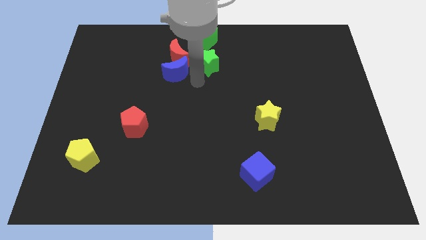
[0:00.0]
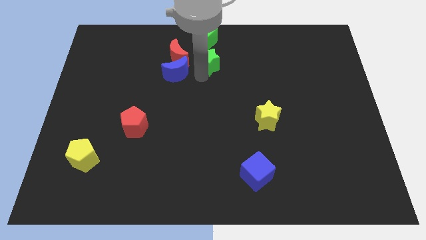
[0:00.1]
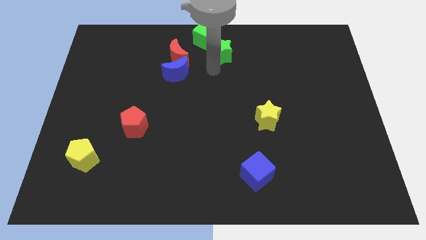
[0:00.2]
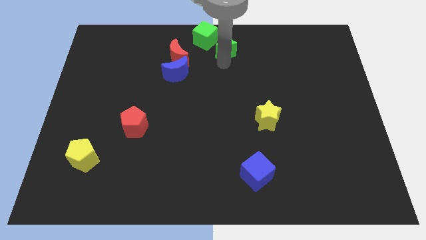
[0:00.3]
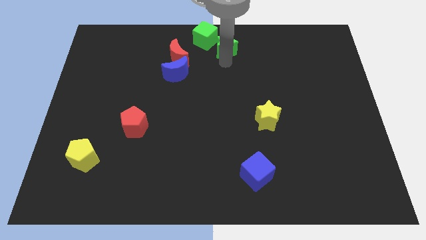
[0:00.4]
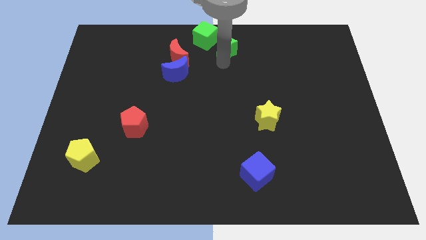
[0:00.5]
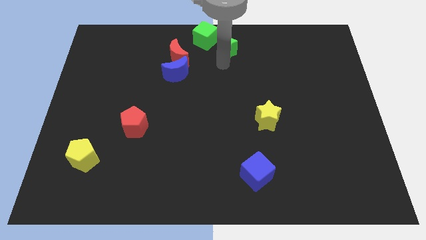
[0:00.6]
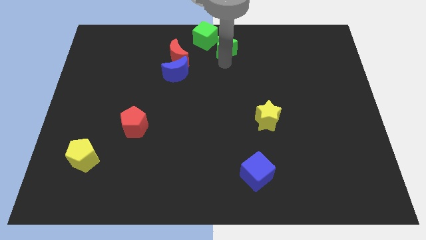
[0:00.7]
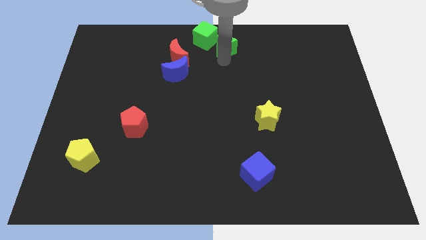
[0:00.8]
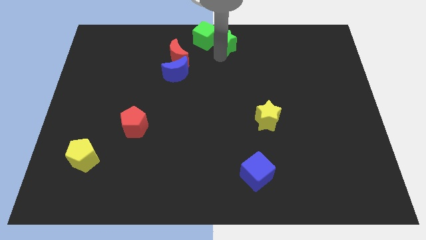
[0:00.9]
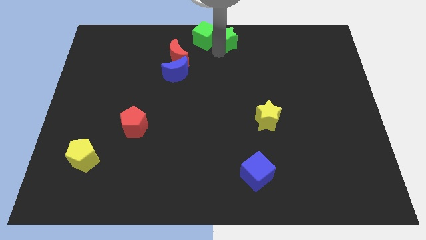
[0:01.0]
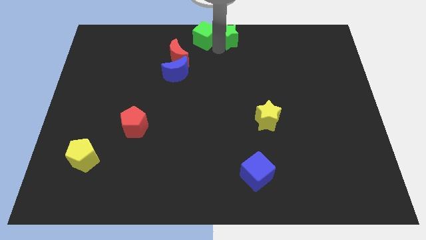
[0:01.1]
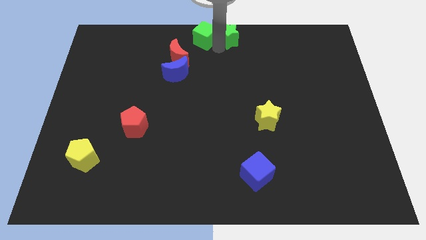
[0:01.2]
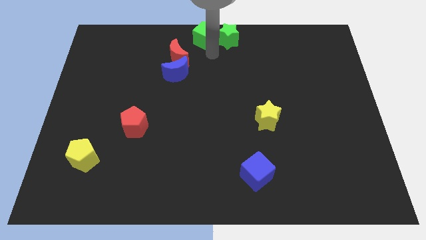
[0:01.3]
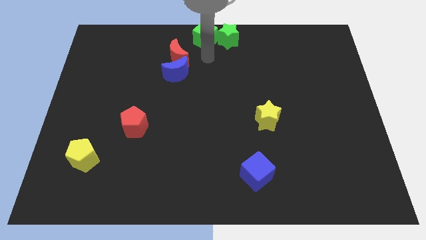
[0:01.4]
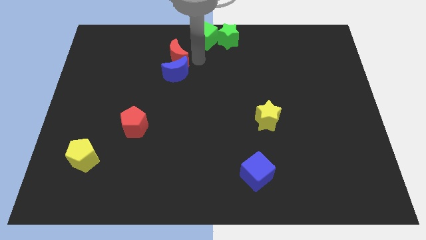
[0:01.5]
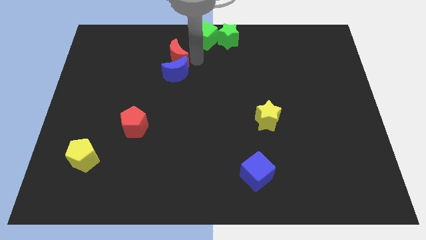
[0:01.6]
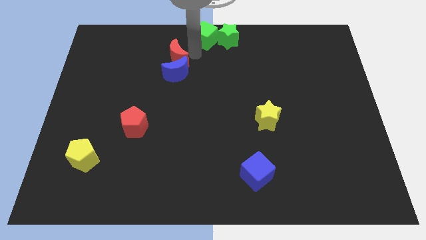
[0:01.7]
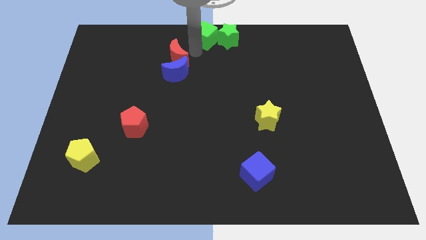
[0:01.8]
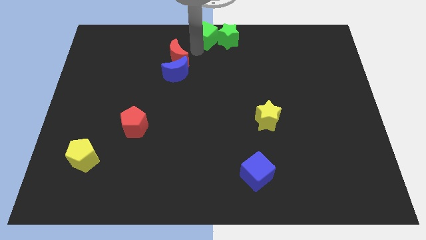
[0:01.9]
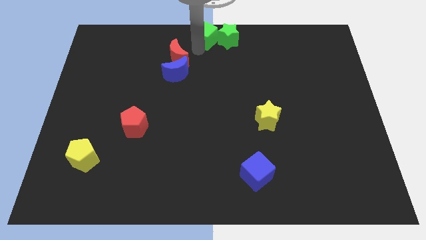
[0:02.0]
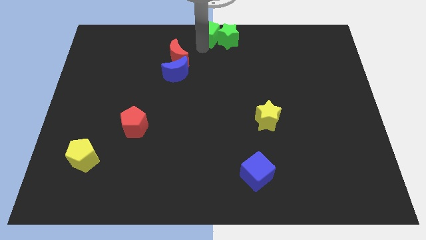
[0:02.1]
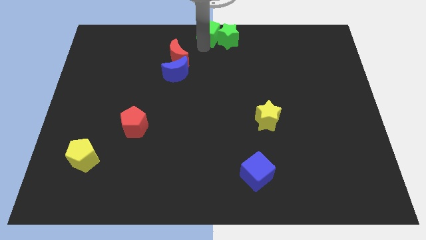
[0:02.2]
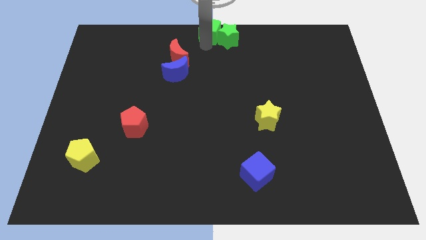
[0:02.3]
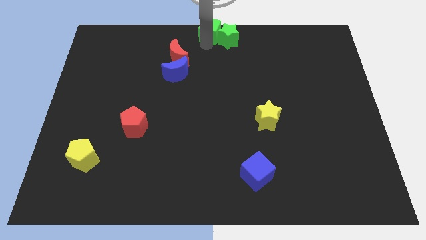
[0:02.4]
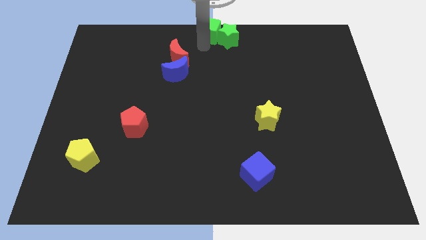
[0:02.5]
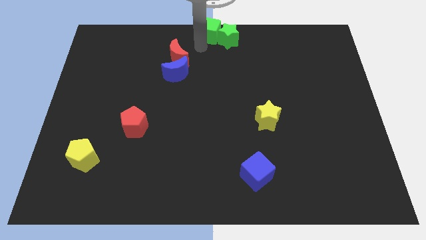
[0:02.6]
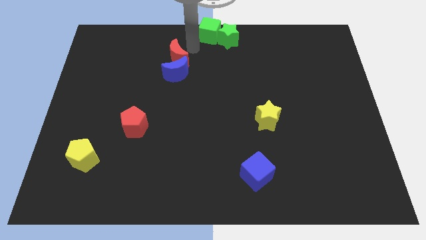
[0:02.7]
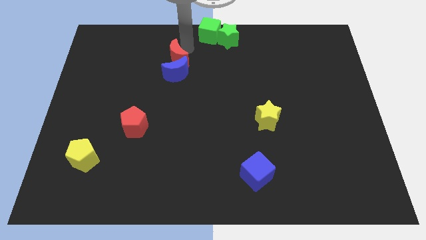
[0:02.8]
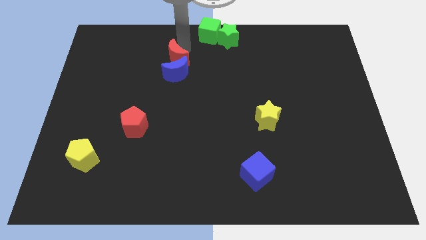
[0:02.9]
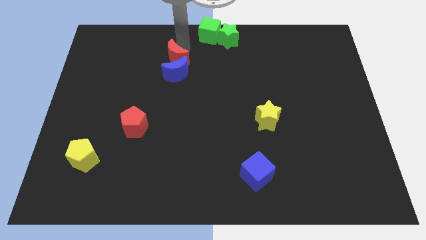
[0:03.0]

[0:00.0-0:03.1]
place the green blocks at the top center of the board

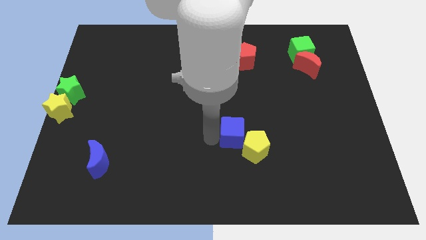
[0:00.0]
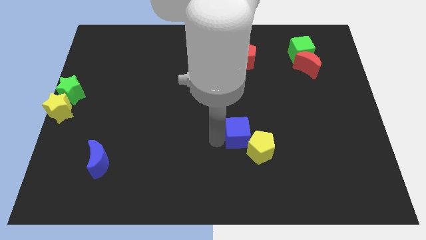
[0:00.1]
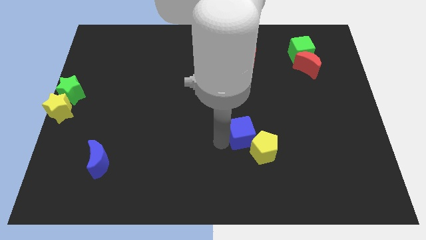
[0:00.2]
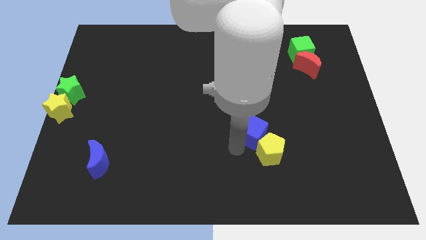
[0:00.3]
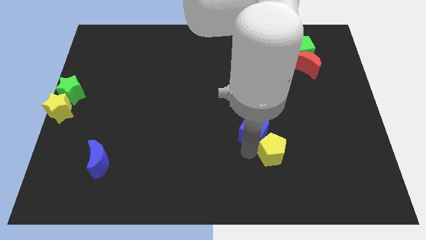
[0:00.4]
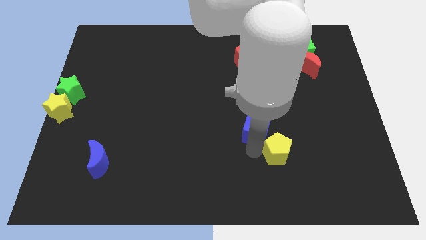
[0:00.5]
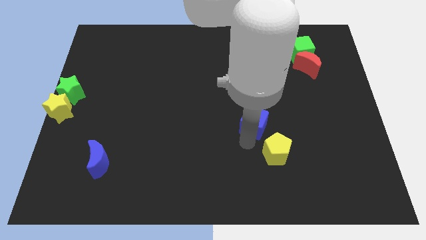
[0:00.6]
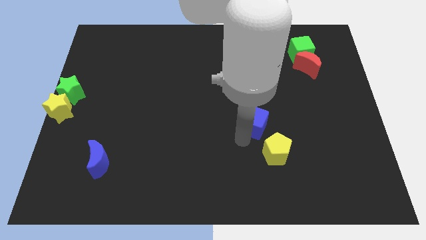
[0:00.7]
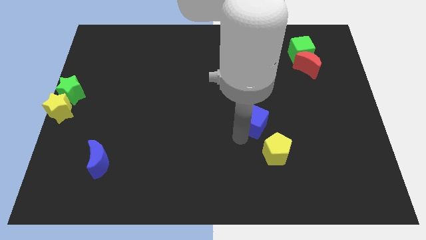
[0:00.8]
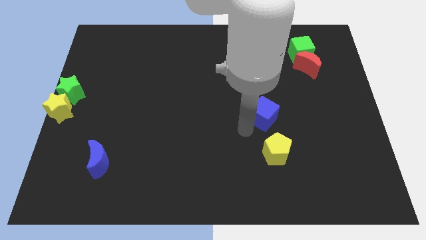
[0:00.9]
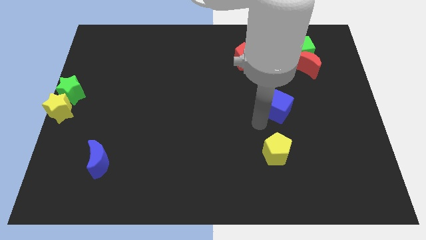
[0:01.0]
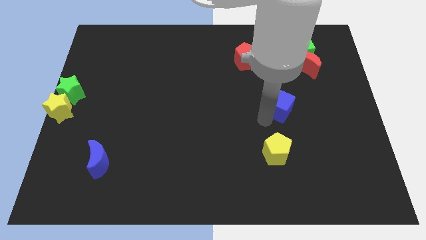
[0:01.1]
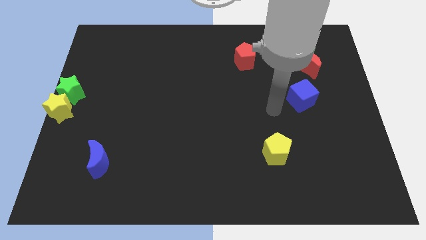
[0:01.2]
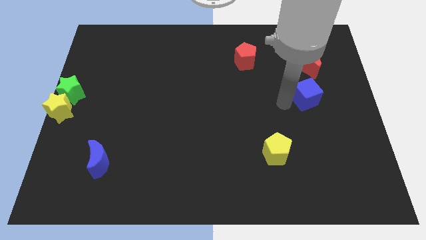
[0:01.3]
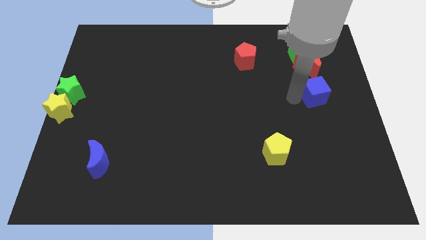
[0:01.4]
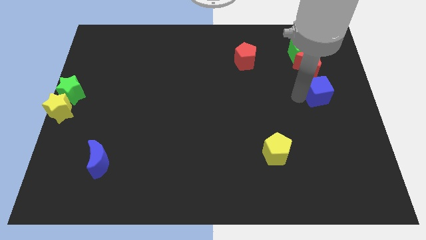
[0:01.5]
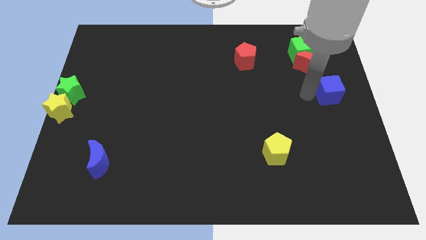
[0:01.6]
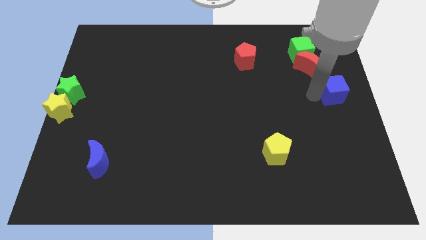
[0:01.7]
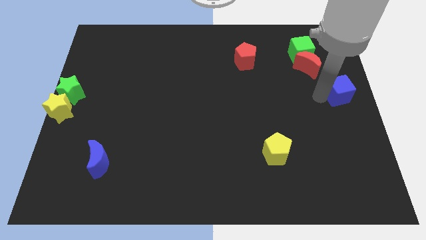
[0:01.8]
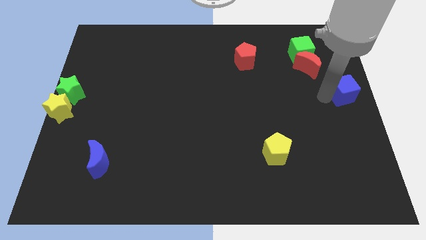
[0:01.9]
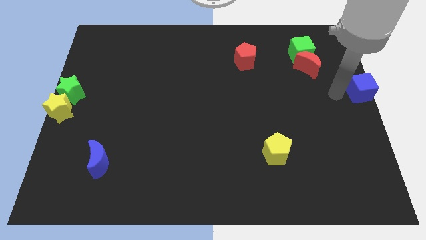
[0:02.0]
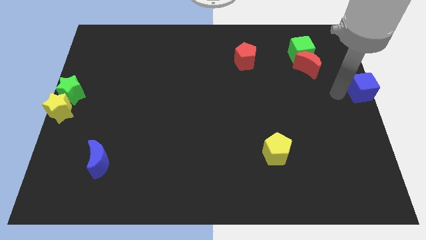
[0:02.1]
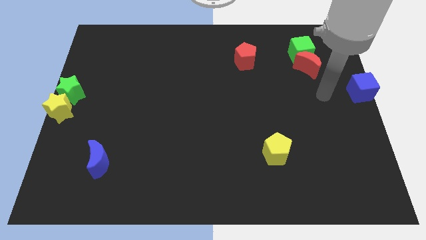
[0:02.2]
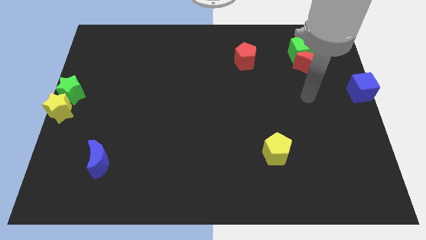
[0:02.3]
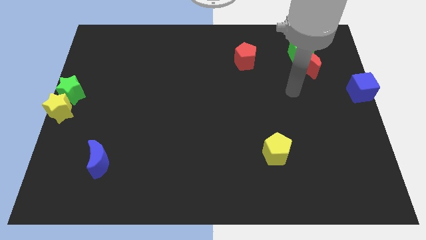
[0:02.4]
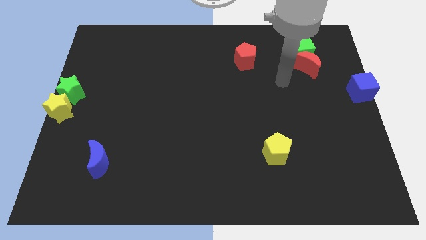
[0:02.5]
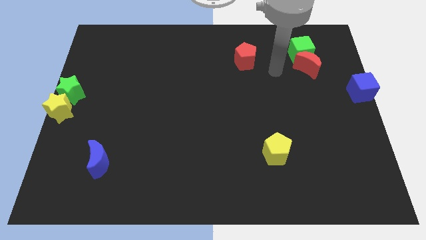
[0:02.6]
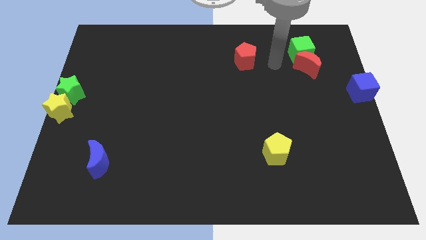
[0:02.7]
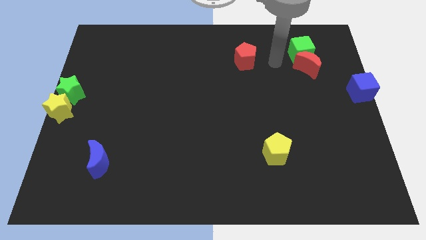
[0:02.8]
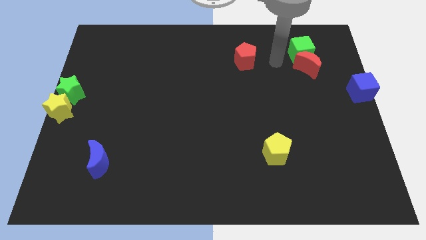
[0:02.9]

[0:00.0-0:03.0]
move the blue cube to the right side of the board

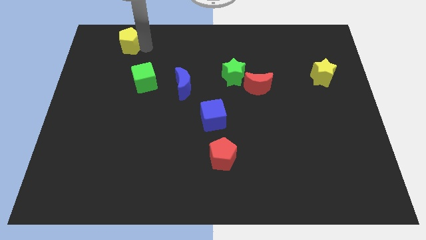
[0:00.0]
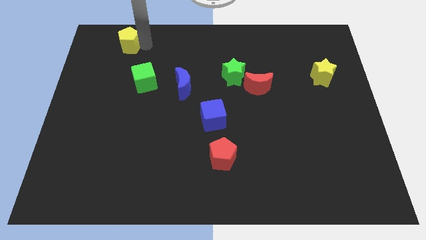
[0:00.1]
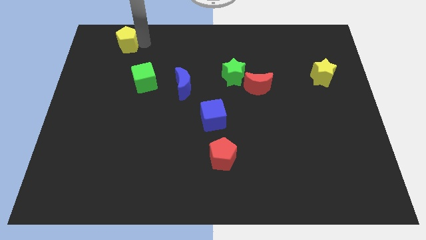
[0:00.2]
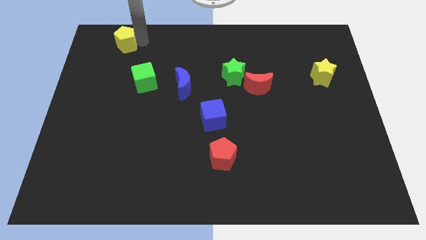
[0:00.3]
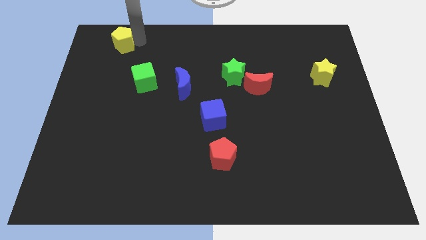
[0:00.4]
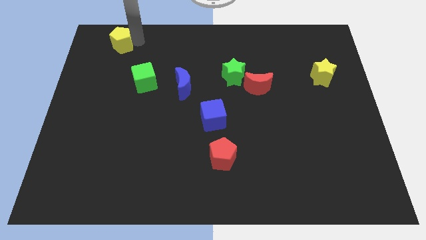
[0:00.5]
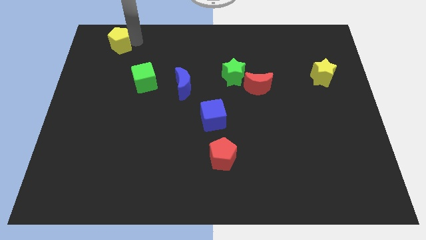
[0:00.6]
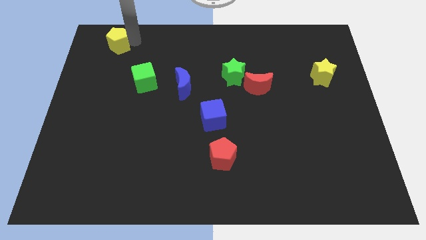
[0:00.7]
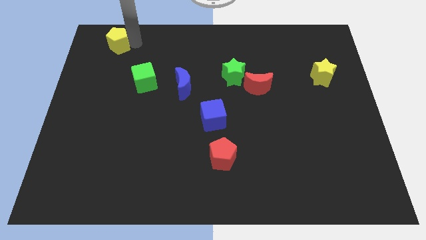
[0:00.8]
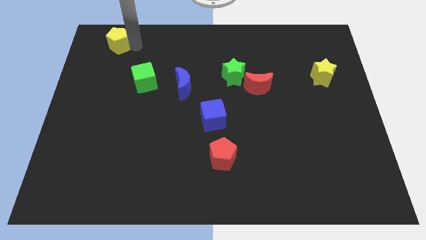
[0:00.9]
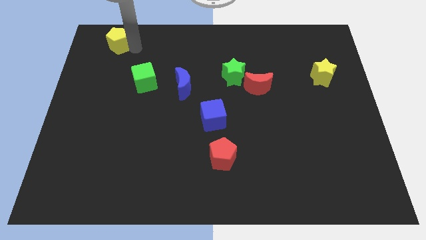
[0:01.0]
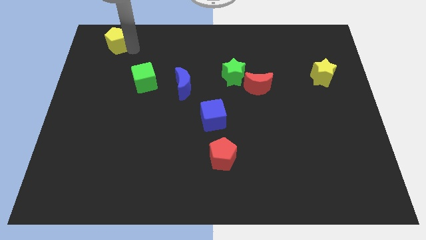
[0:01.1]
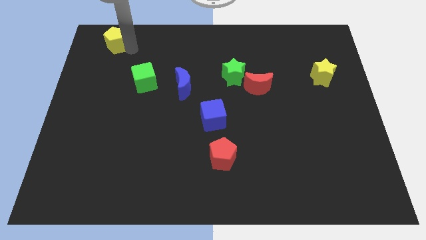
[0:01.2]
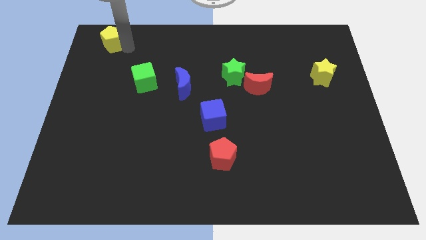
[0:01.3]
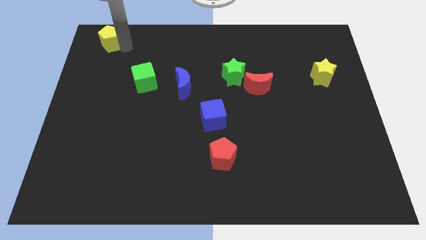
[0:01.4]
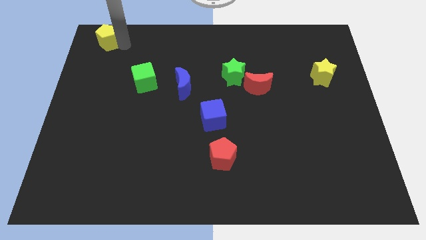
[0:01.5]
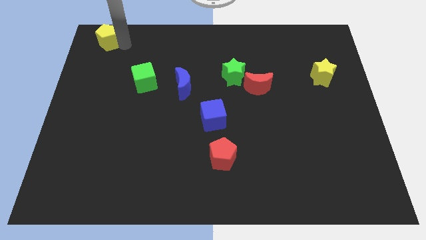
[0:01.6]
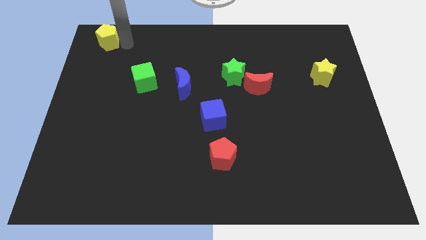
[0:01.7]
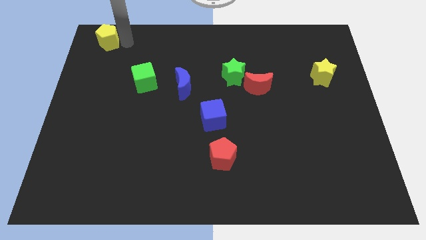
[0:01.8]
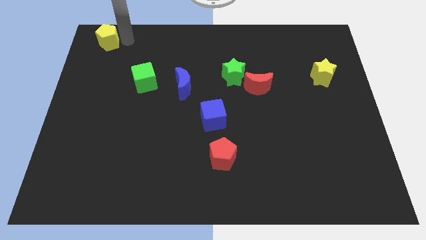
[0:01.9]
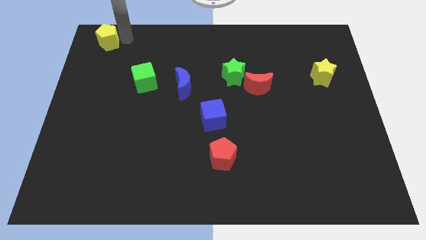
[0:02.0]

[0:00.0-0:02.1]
slightly push the yellow pentagon to the top left corner of the board

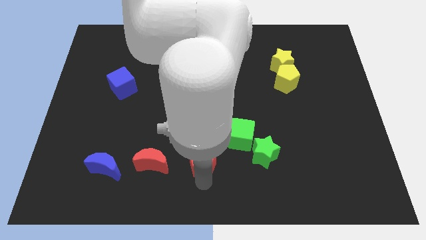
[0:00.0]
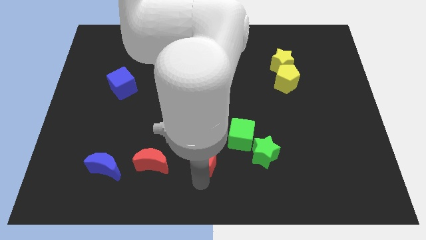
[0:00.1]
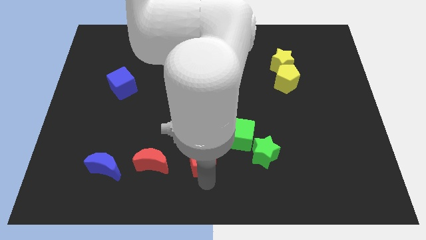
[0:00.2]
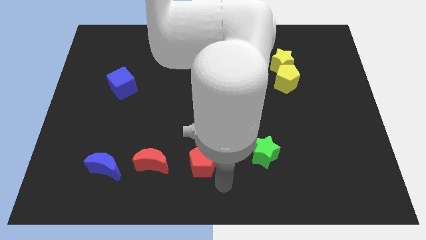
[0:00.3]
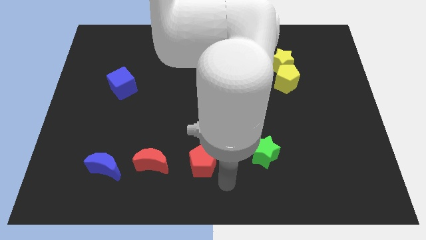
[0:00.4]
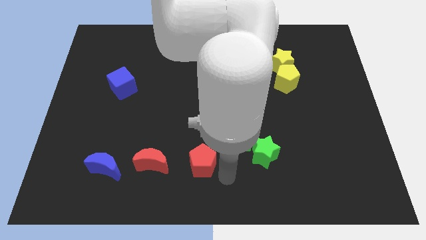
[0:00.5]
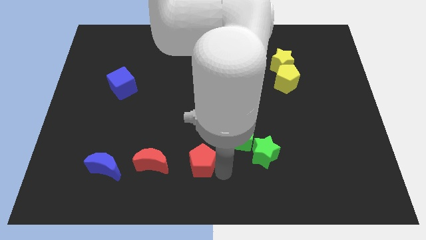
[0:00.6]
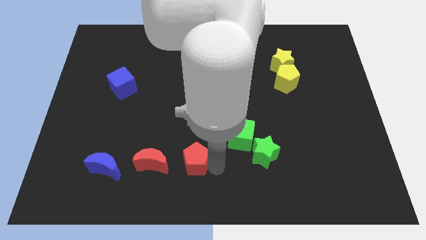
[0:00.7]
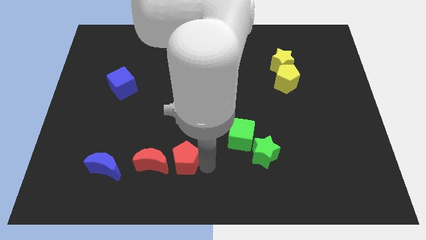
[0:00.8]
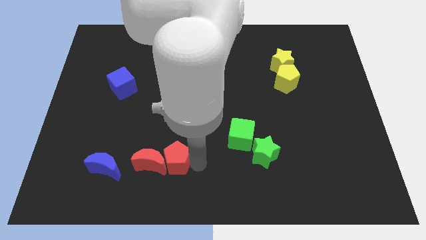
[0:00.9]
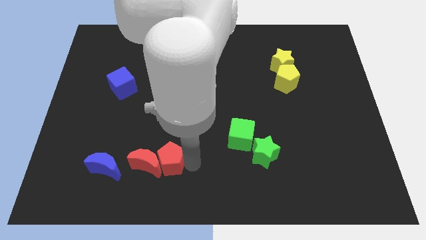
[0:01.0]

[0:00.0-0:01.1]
place red pentagon into the right of red moon
